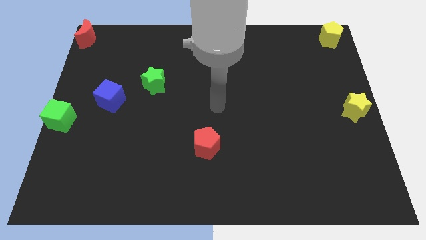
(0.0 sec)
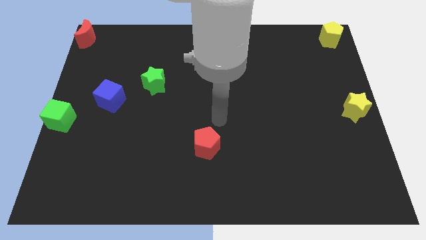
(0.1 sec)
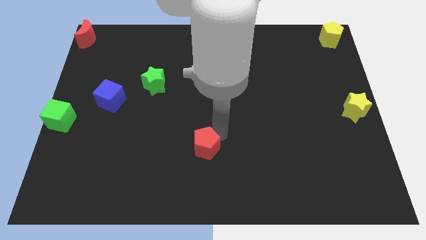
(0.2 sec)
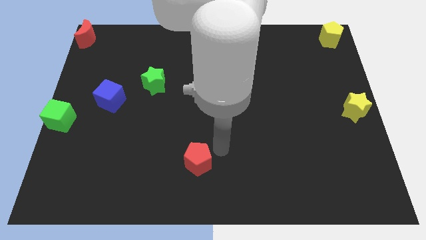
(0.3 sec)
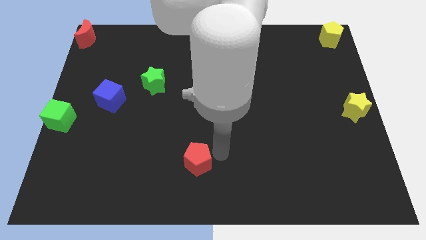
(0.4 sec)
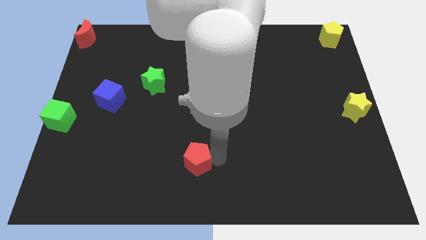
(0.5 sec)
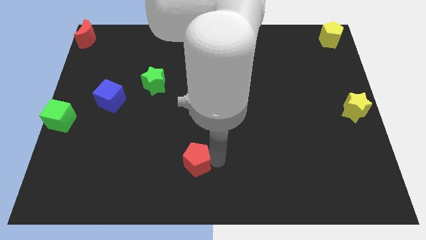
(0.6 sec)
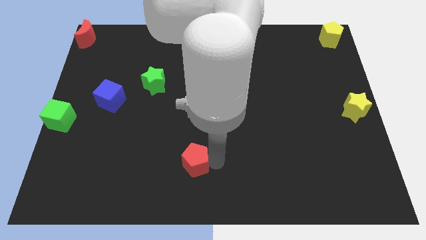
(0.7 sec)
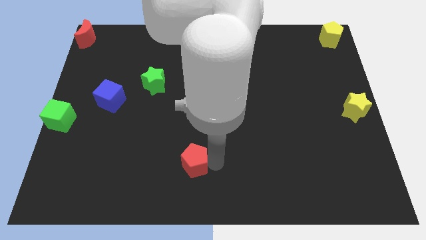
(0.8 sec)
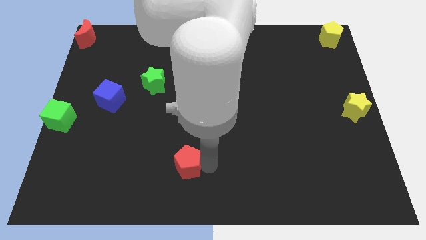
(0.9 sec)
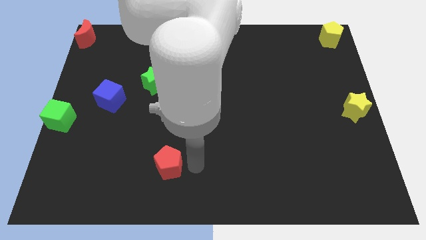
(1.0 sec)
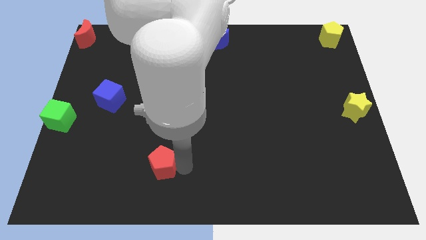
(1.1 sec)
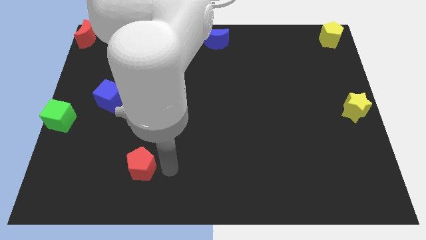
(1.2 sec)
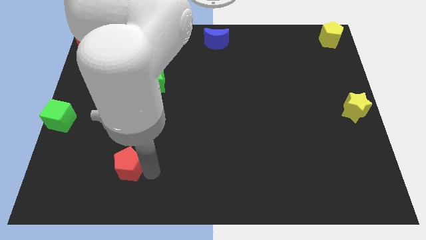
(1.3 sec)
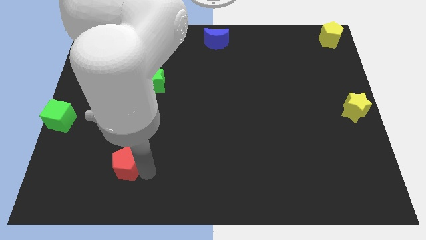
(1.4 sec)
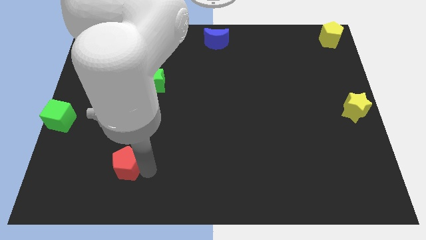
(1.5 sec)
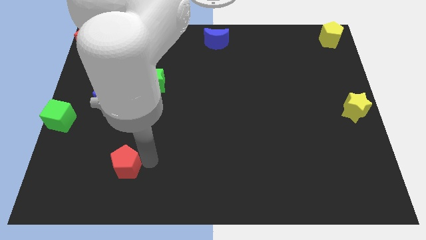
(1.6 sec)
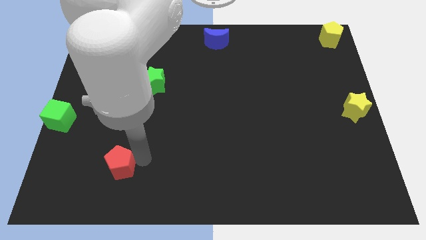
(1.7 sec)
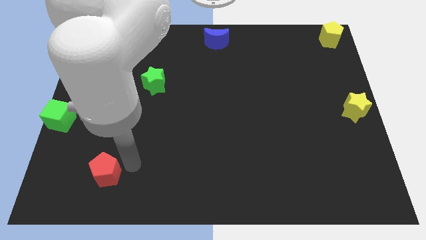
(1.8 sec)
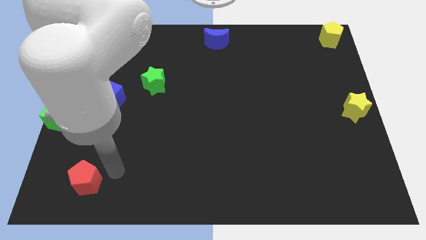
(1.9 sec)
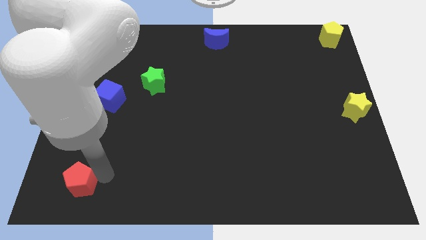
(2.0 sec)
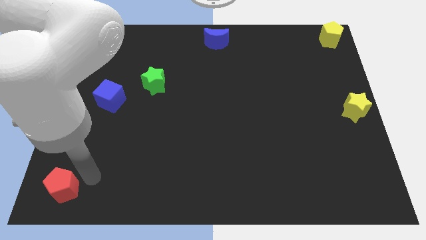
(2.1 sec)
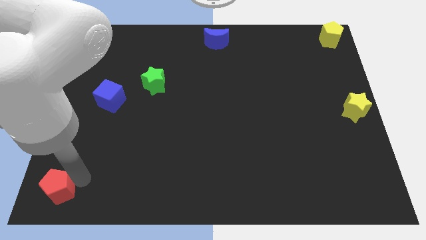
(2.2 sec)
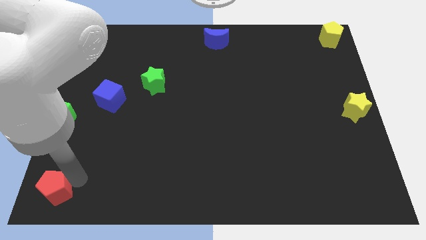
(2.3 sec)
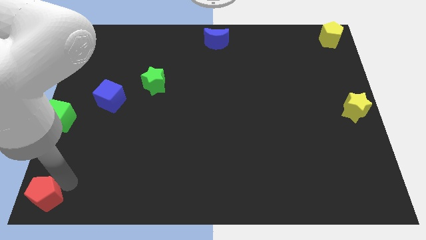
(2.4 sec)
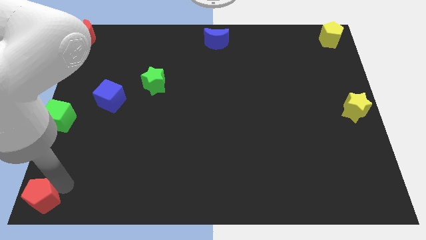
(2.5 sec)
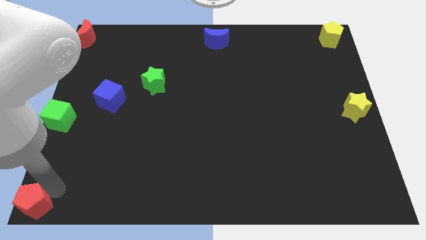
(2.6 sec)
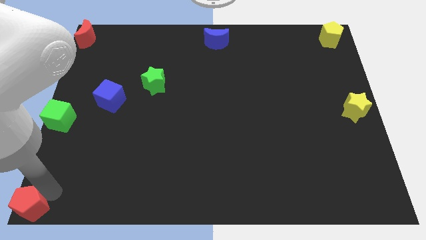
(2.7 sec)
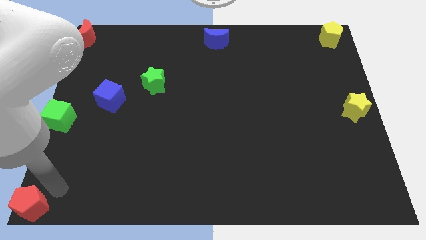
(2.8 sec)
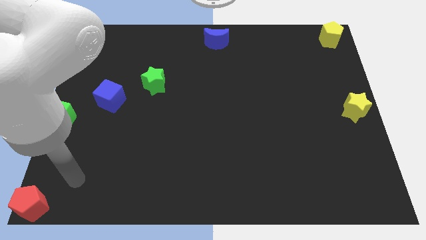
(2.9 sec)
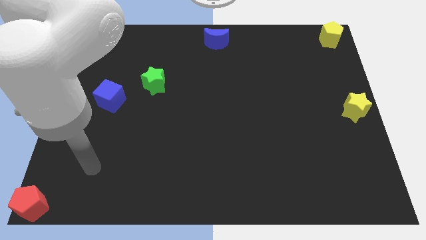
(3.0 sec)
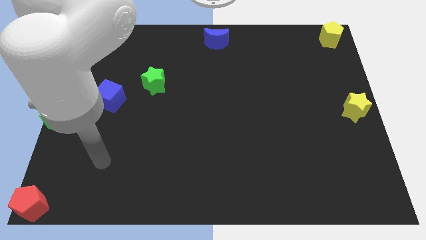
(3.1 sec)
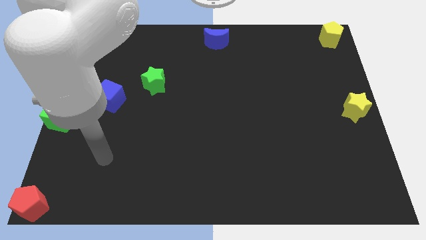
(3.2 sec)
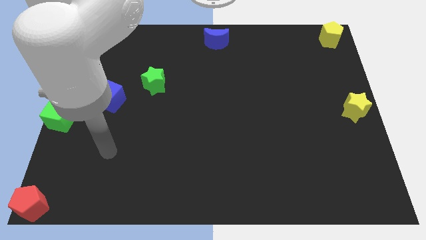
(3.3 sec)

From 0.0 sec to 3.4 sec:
place the red pentagon to the bottom left corner of the board

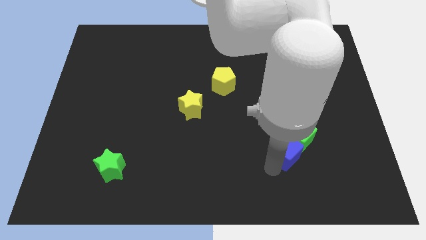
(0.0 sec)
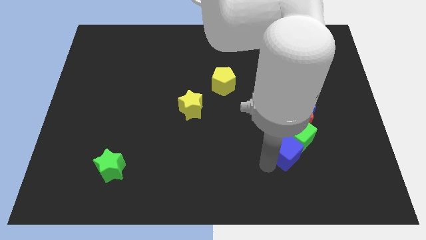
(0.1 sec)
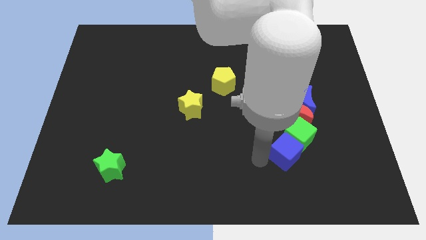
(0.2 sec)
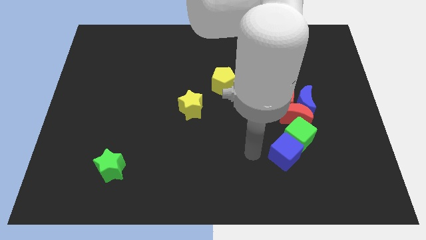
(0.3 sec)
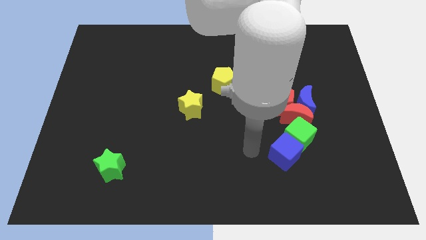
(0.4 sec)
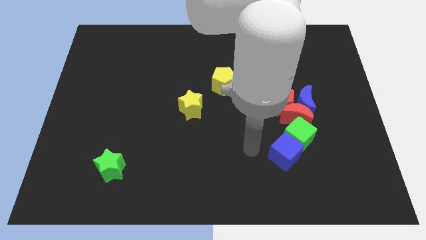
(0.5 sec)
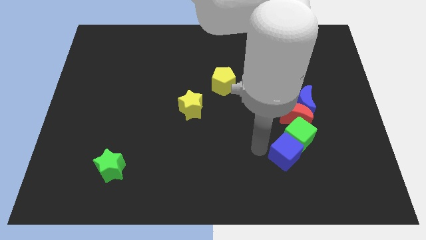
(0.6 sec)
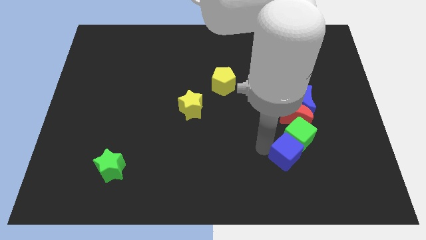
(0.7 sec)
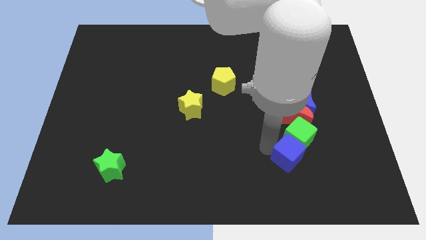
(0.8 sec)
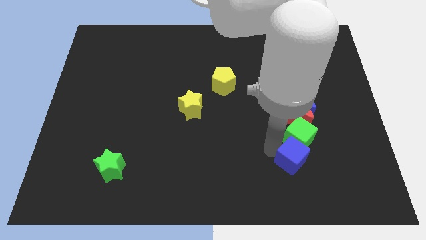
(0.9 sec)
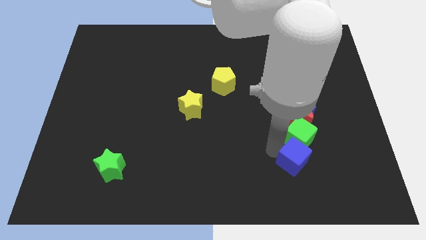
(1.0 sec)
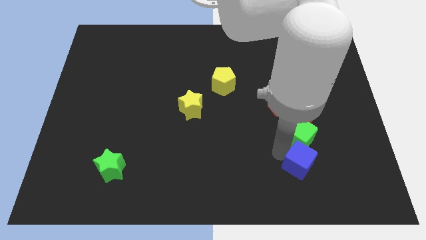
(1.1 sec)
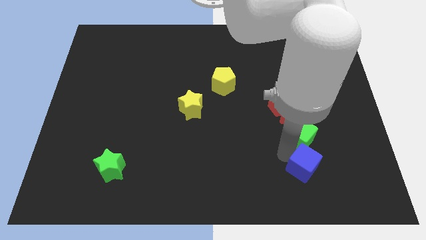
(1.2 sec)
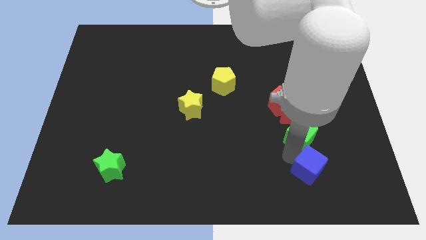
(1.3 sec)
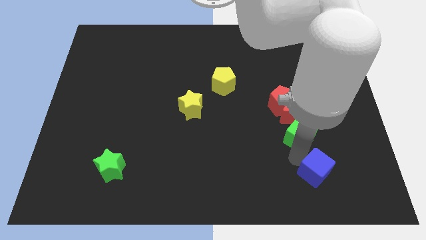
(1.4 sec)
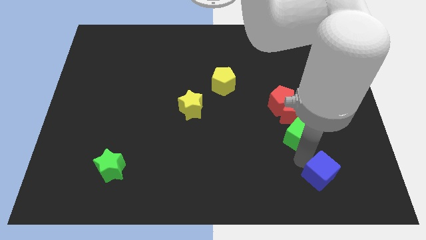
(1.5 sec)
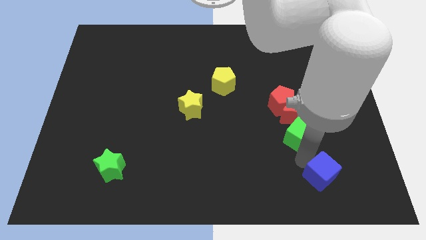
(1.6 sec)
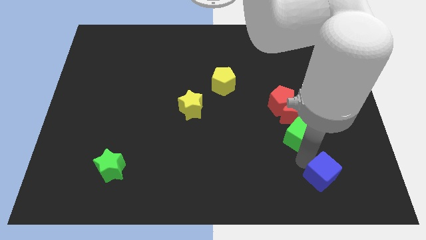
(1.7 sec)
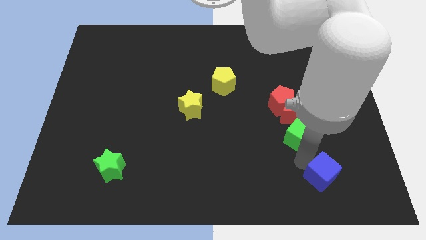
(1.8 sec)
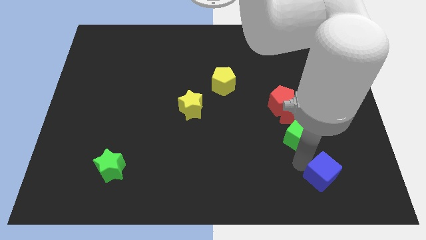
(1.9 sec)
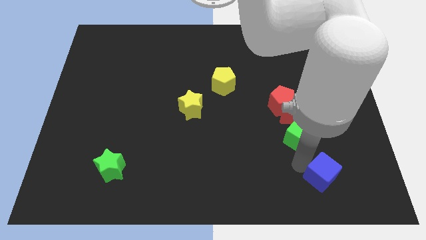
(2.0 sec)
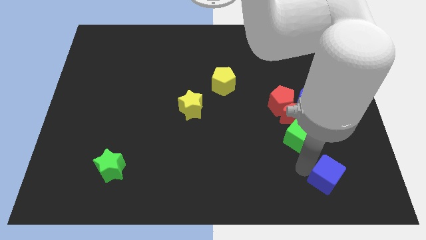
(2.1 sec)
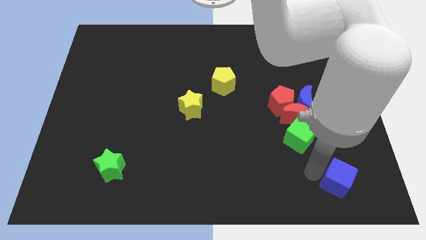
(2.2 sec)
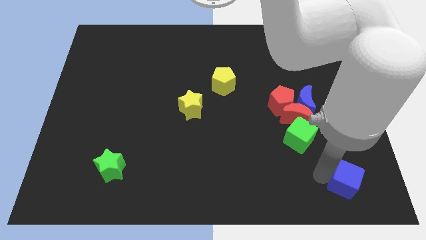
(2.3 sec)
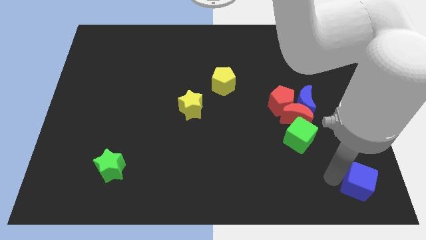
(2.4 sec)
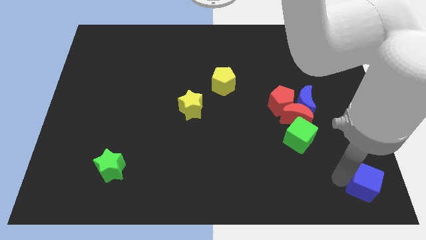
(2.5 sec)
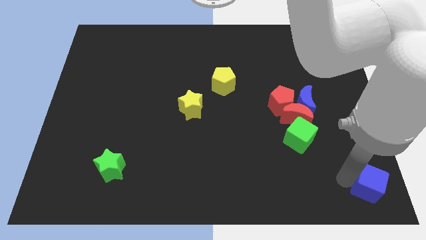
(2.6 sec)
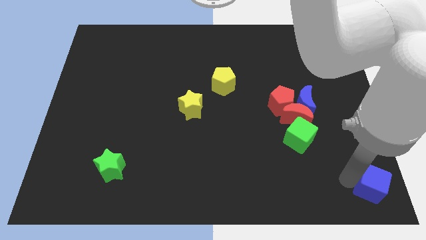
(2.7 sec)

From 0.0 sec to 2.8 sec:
push the blue cube to the bottom right of the green cube

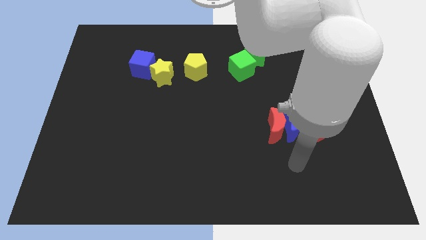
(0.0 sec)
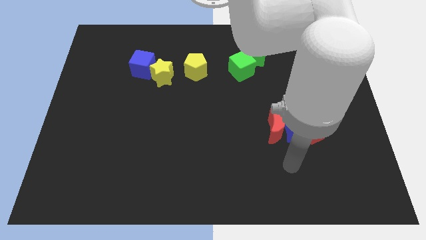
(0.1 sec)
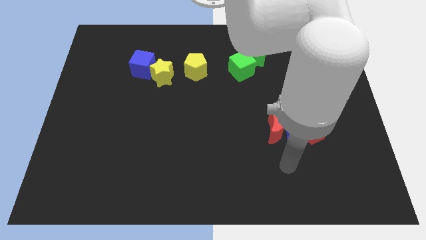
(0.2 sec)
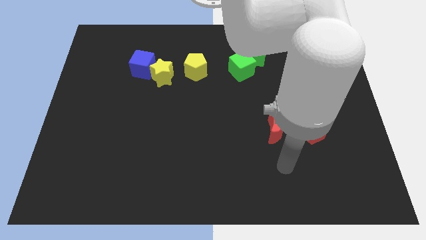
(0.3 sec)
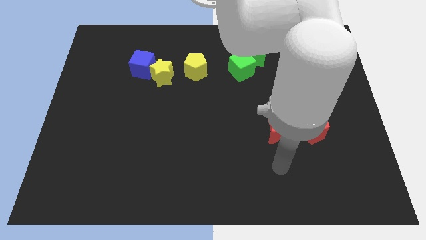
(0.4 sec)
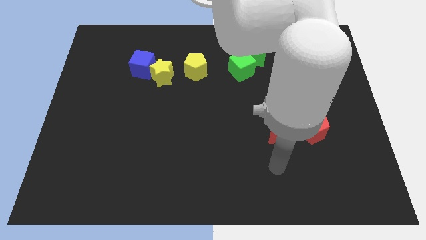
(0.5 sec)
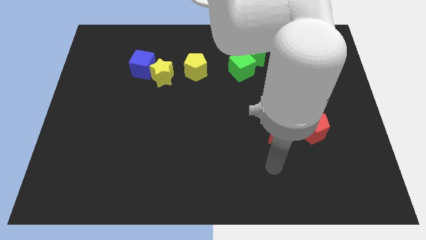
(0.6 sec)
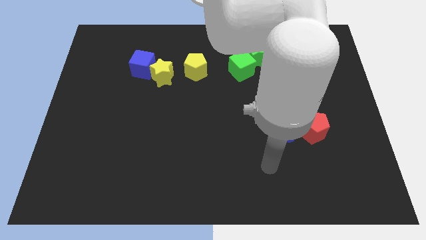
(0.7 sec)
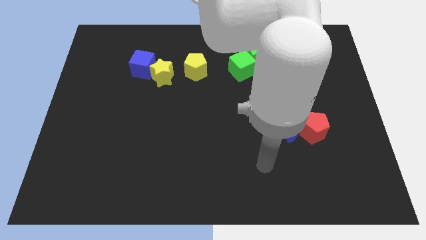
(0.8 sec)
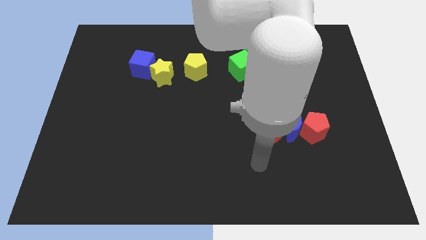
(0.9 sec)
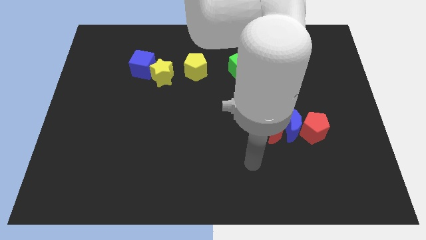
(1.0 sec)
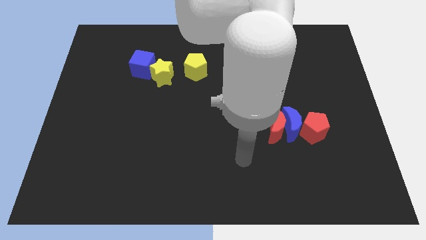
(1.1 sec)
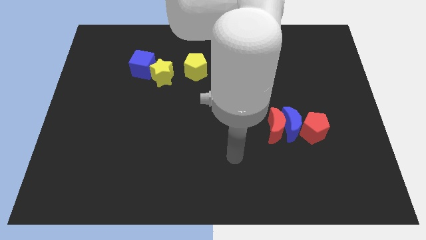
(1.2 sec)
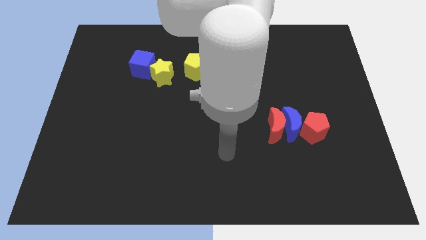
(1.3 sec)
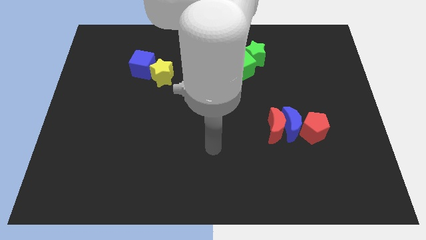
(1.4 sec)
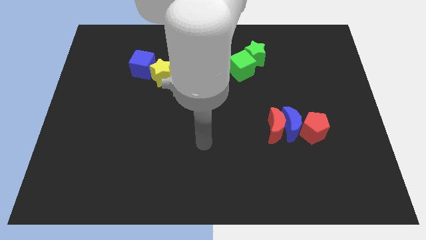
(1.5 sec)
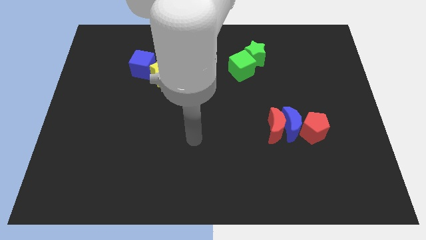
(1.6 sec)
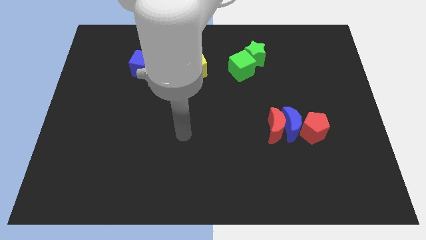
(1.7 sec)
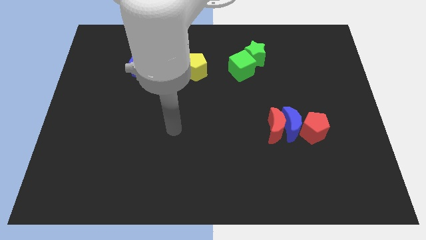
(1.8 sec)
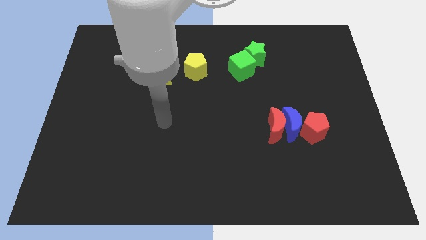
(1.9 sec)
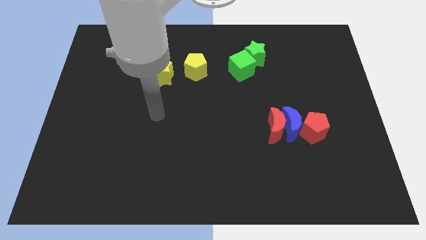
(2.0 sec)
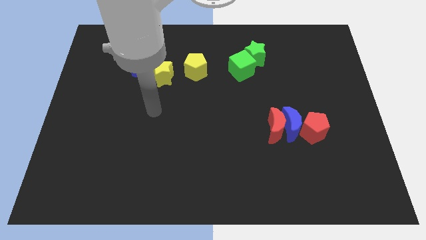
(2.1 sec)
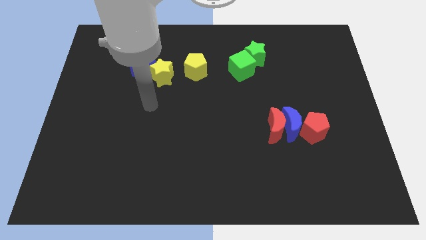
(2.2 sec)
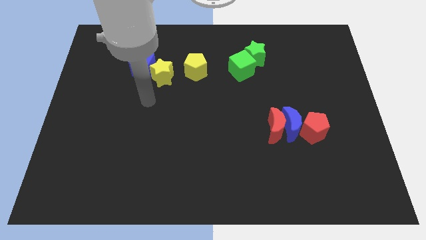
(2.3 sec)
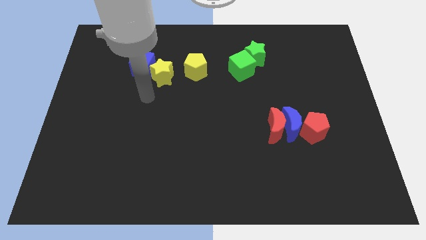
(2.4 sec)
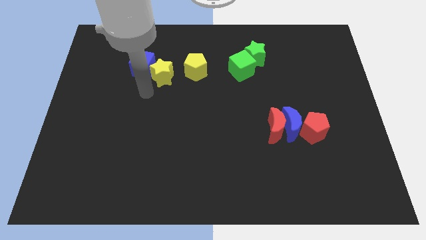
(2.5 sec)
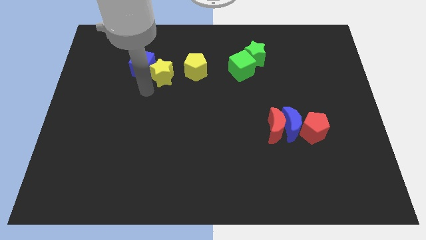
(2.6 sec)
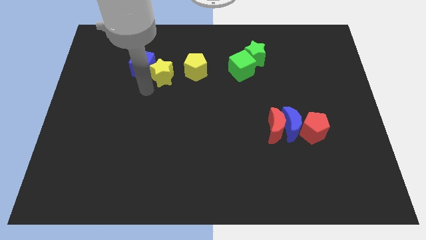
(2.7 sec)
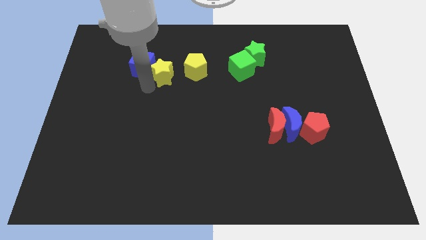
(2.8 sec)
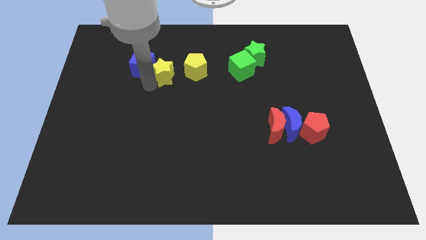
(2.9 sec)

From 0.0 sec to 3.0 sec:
move your arm towards the yellow star
